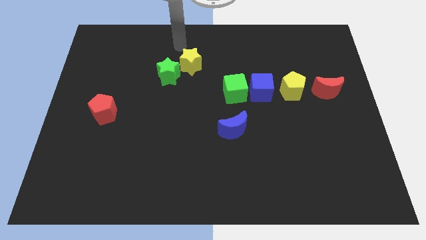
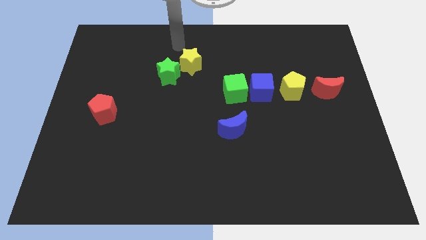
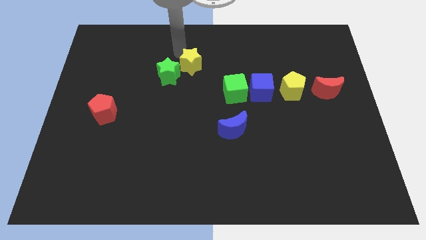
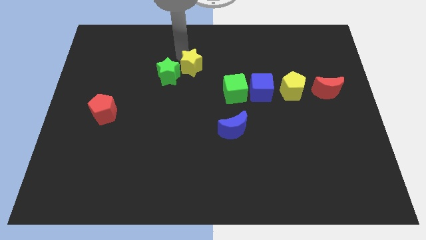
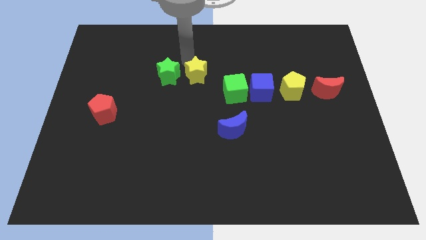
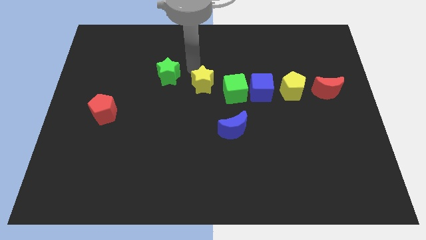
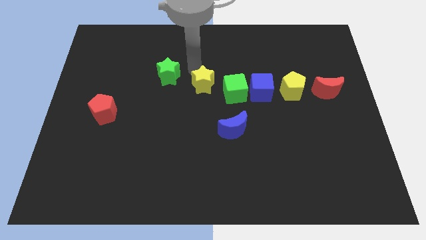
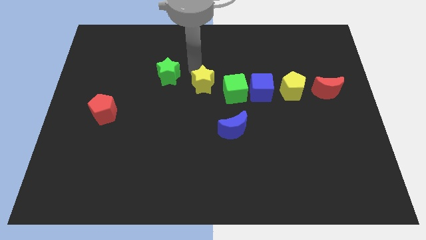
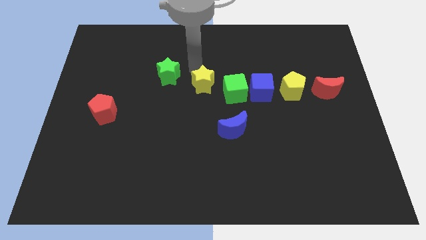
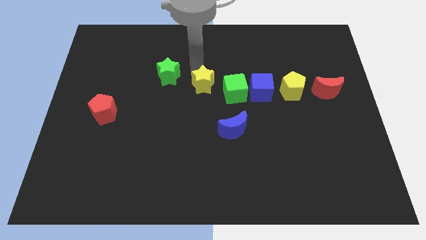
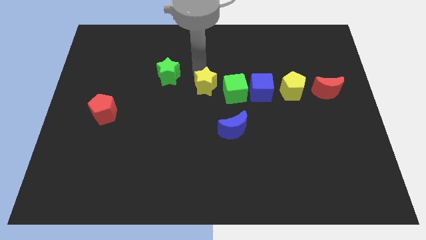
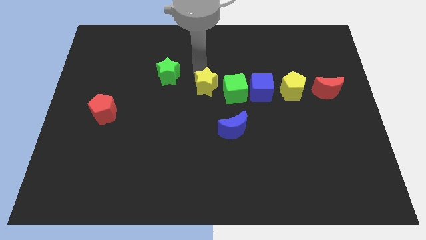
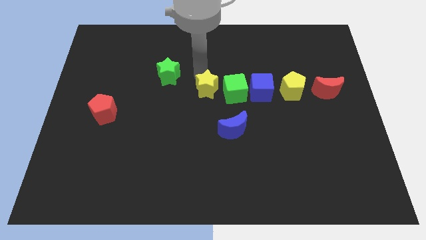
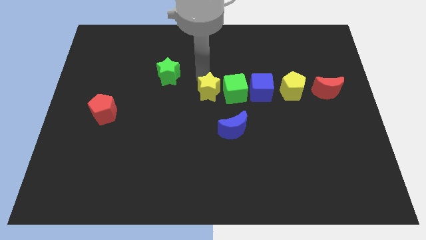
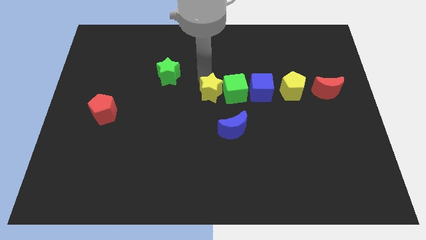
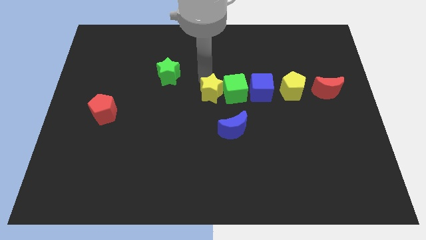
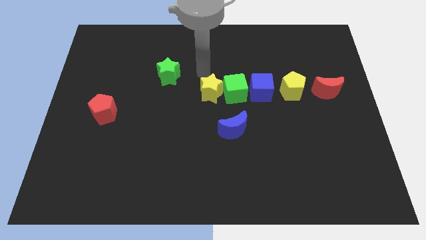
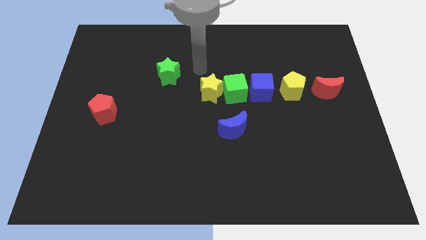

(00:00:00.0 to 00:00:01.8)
move the yellow star to the left side of the green cube

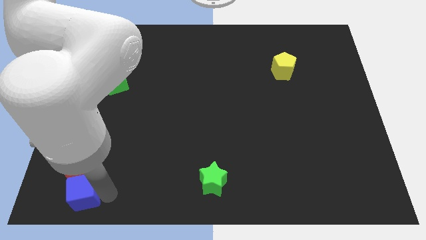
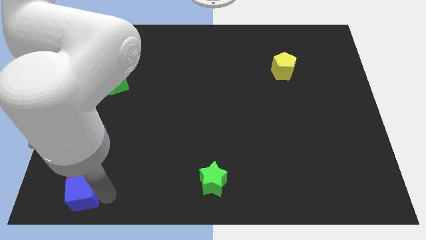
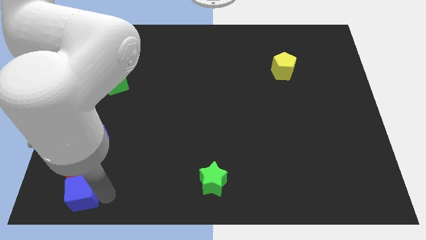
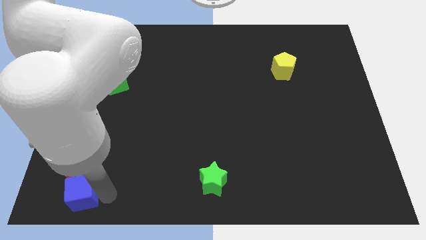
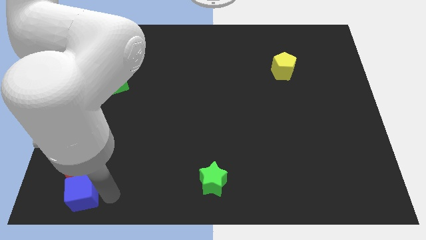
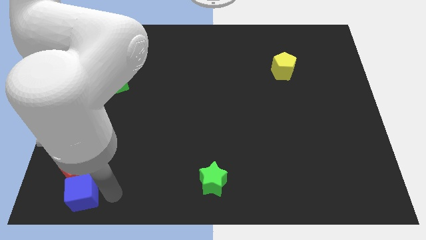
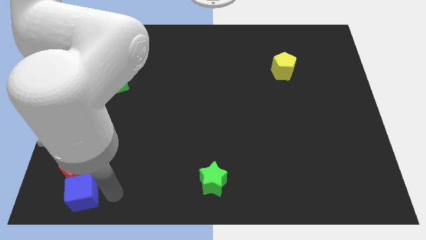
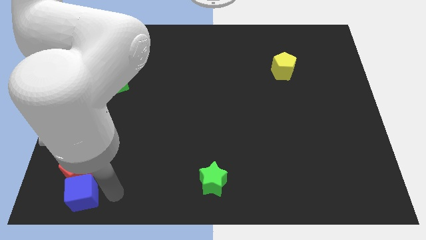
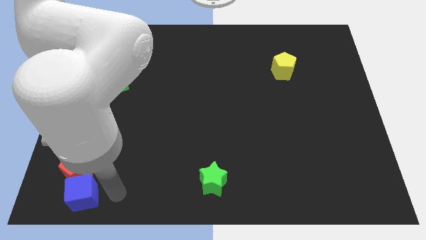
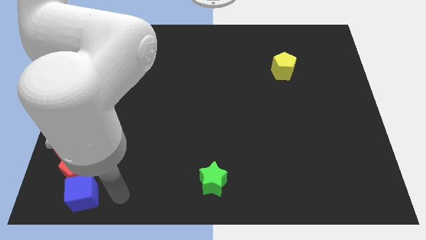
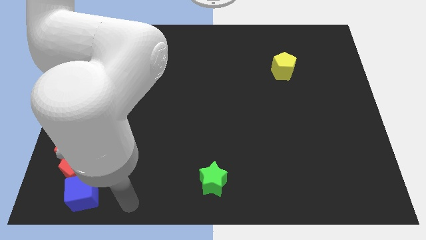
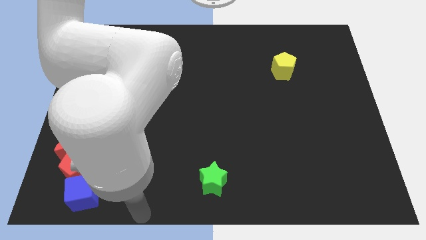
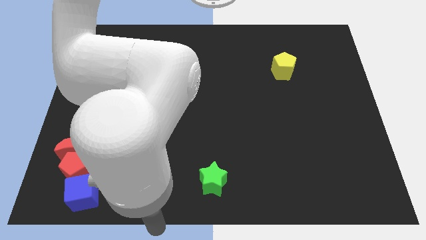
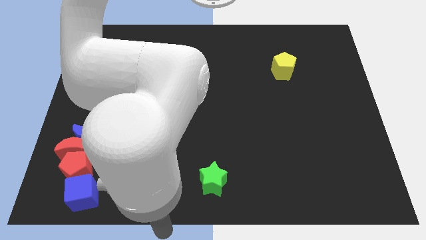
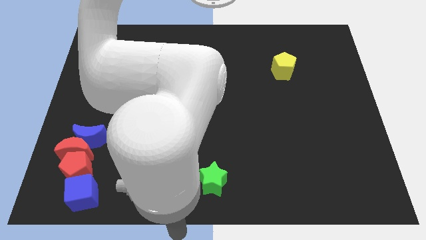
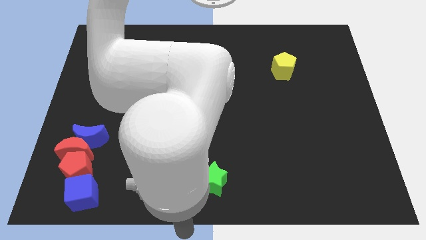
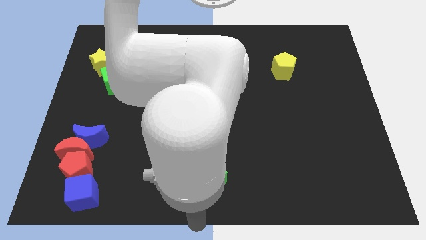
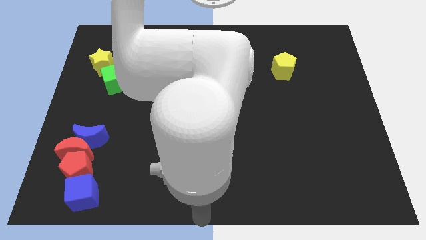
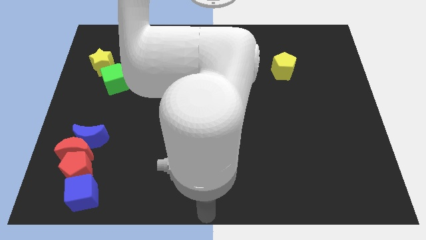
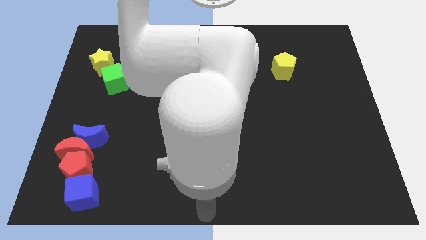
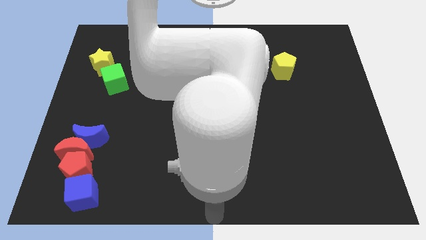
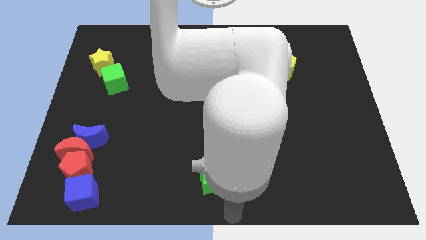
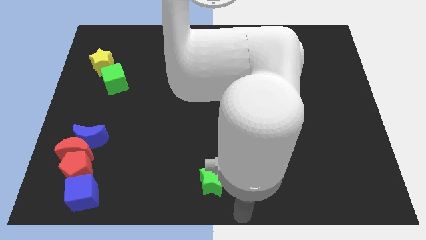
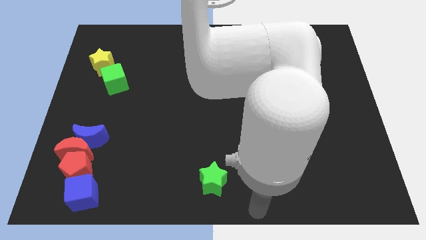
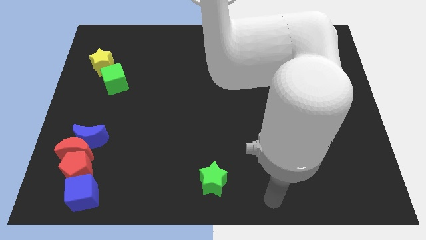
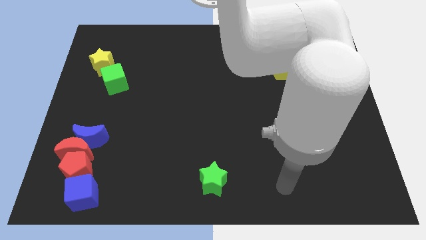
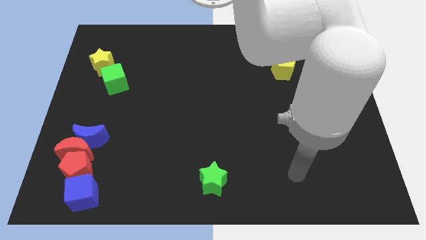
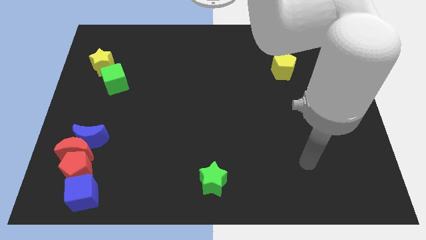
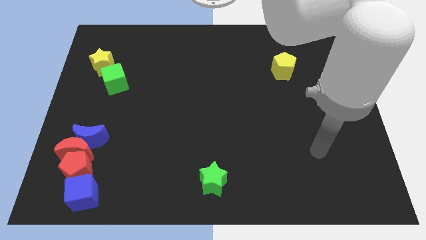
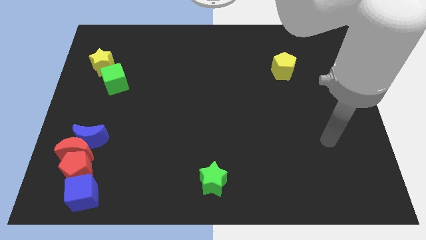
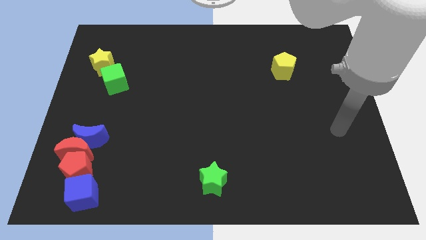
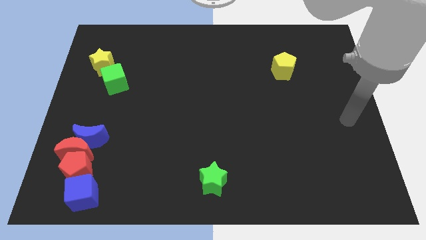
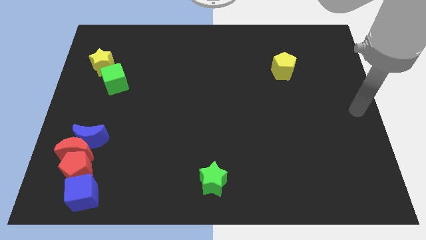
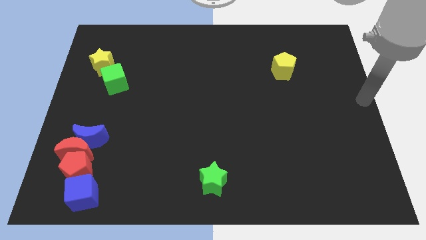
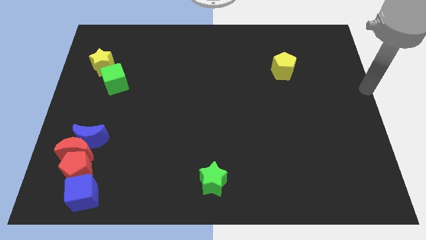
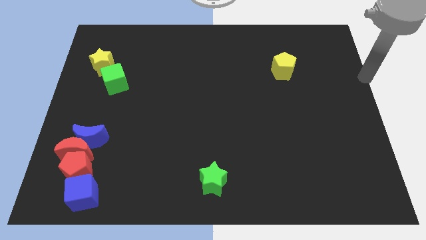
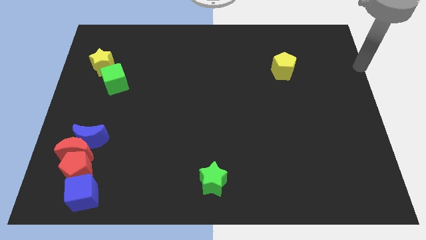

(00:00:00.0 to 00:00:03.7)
place your arm to the right of the yellow pentagon

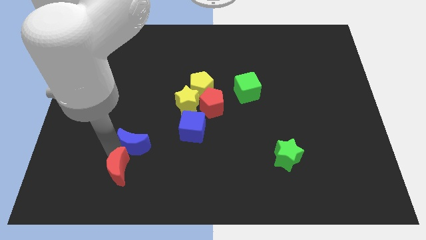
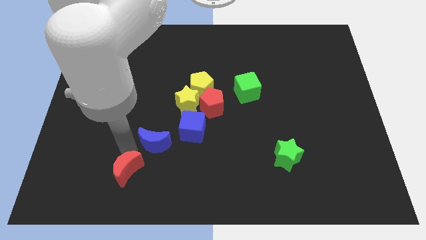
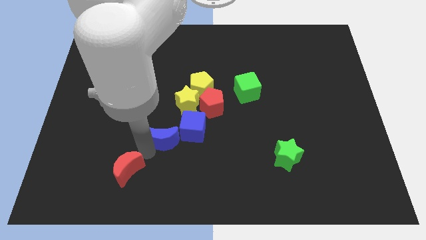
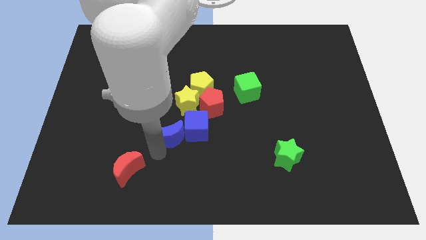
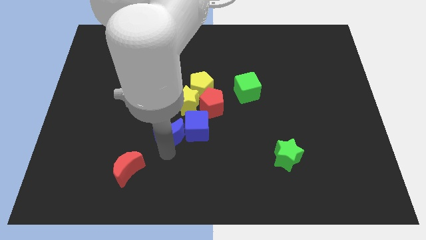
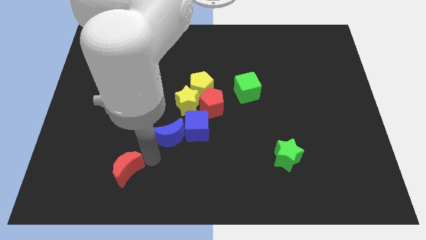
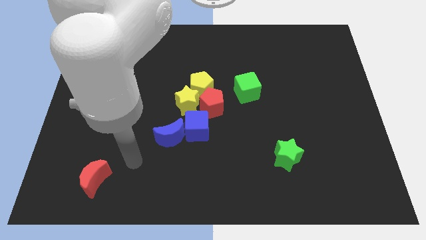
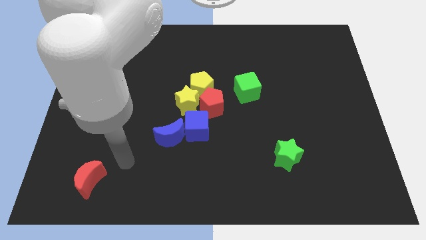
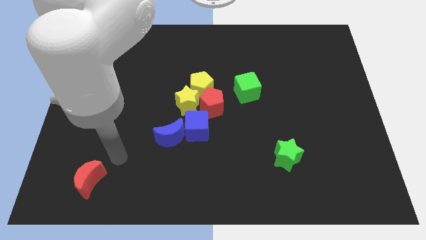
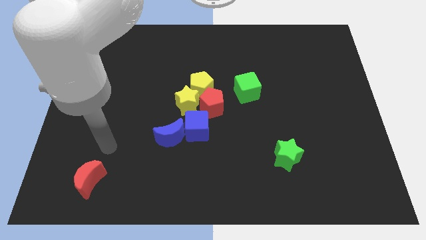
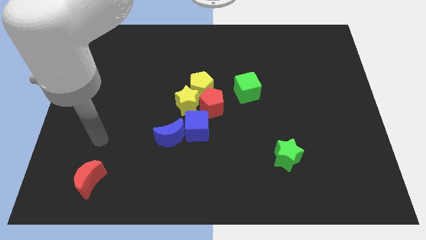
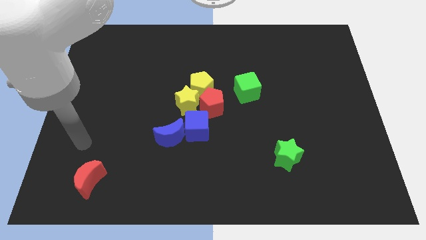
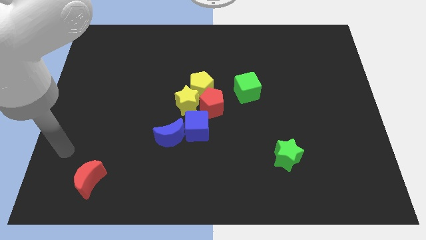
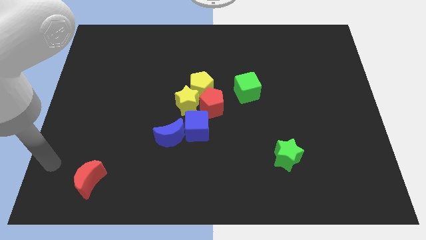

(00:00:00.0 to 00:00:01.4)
separate the red crescent from the blue crescent

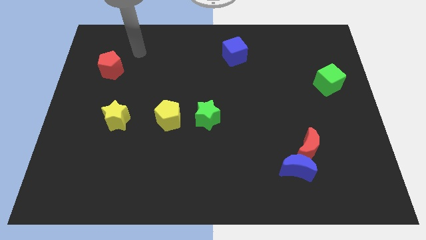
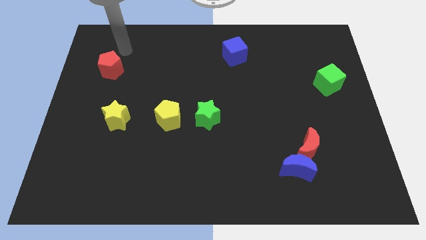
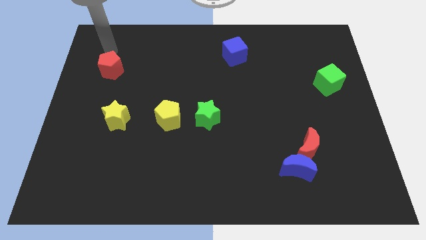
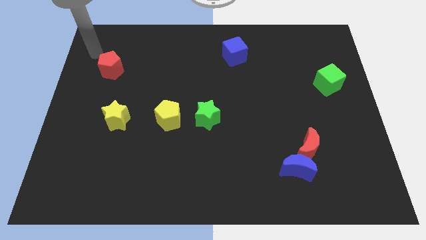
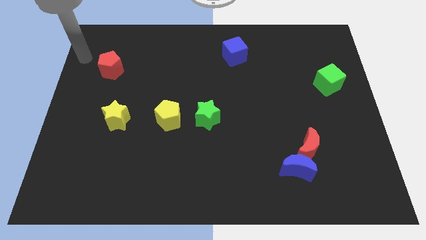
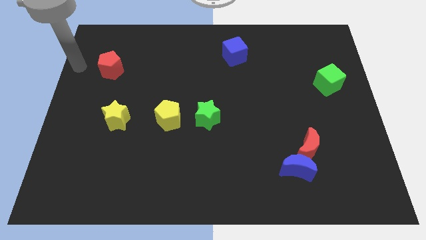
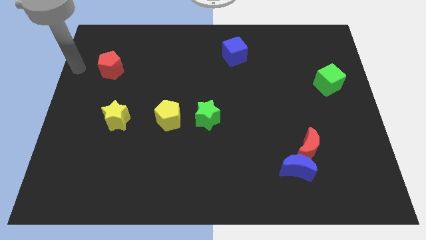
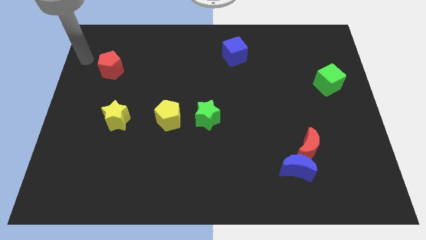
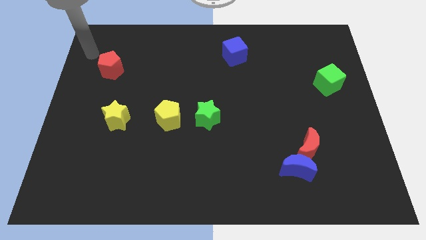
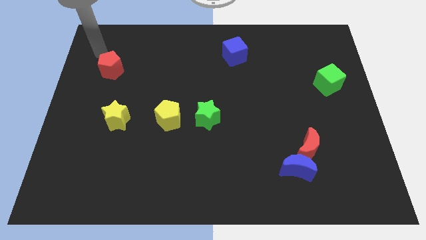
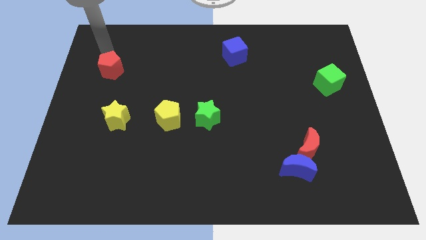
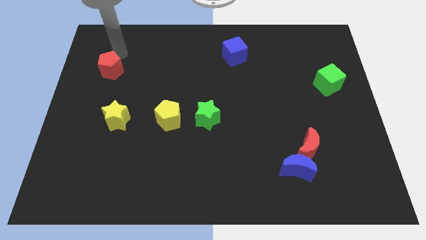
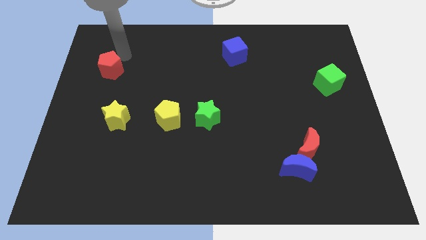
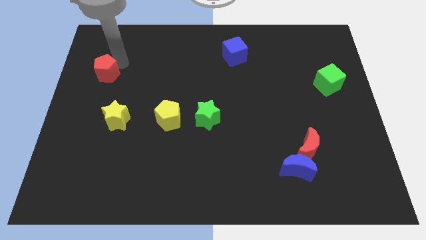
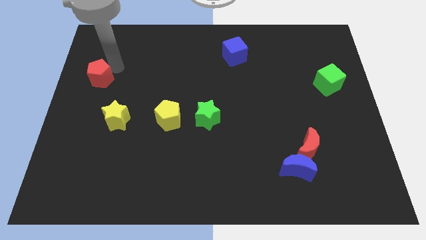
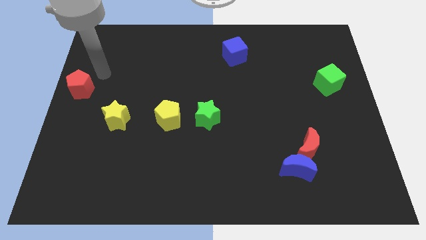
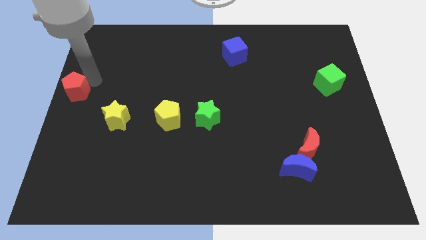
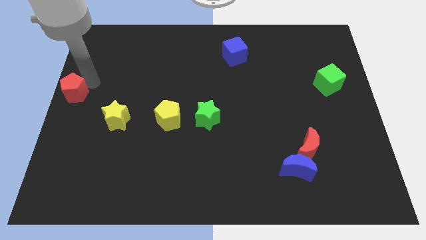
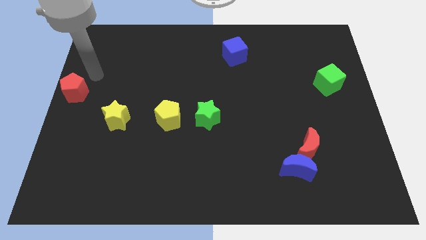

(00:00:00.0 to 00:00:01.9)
place the red pentagon to the left center of board
